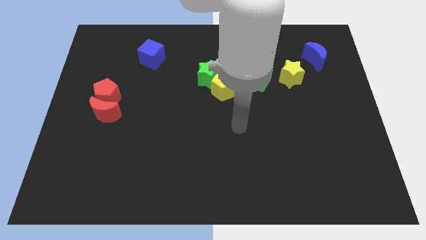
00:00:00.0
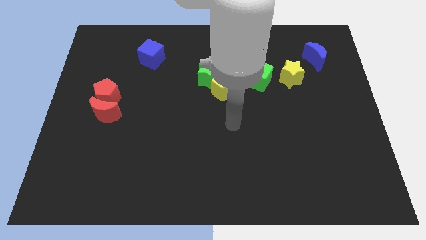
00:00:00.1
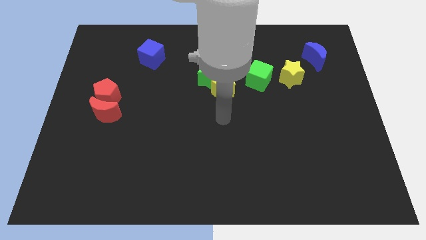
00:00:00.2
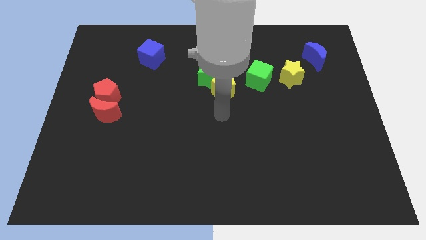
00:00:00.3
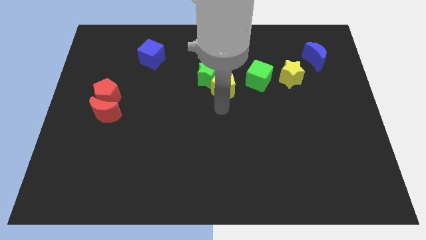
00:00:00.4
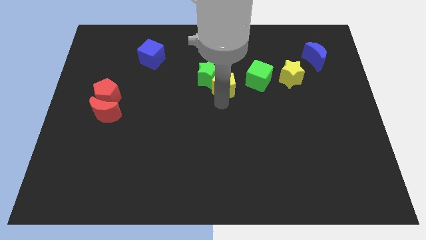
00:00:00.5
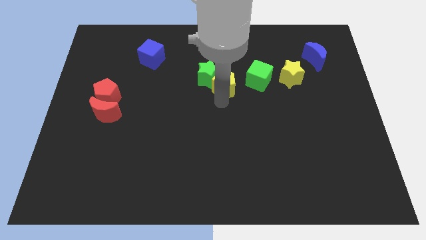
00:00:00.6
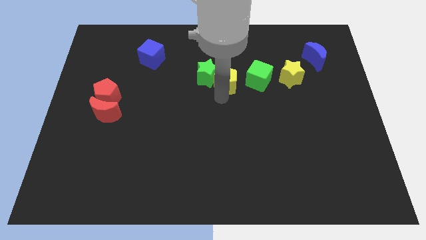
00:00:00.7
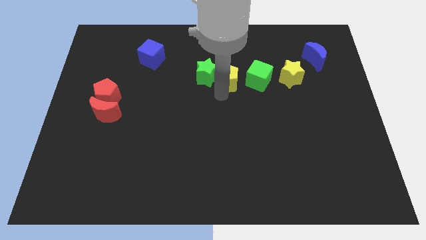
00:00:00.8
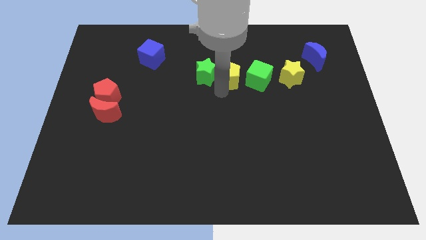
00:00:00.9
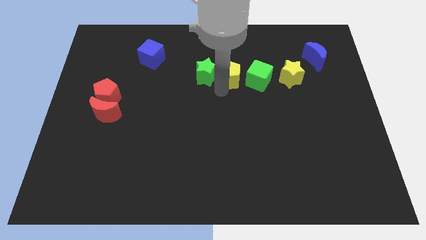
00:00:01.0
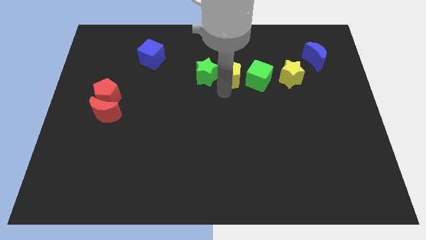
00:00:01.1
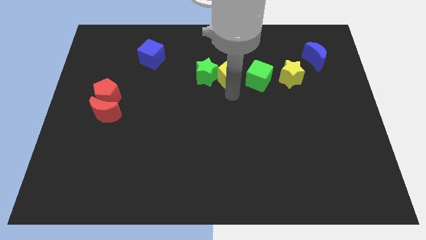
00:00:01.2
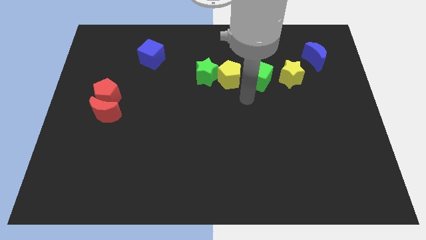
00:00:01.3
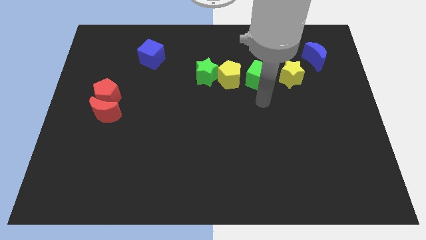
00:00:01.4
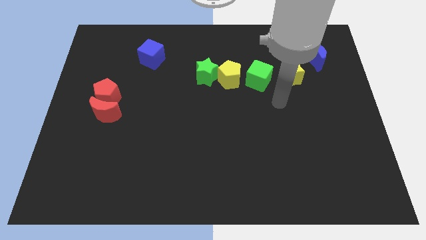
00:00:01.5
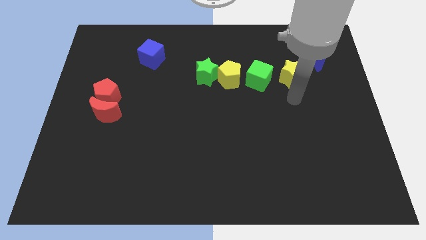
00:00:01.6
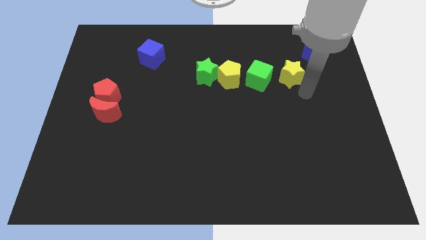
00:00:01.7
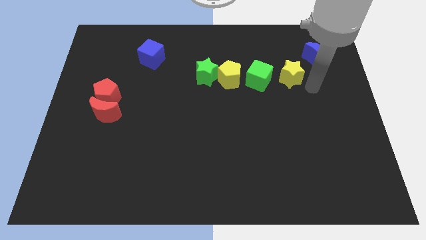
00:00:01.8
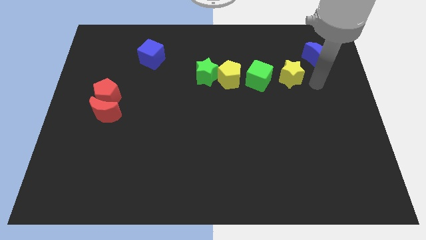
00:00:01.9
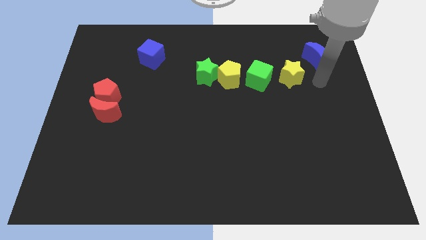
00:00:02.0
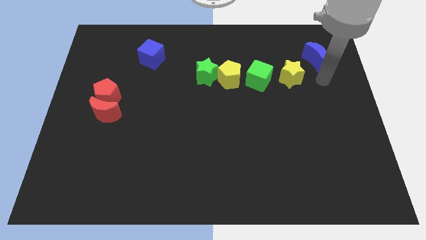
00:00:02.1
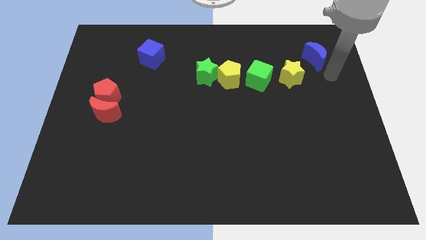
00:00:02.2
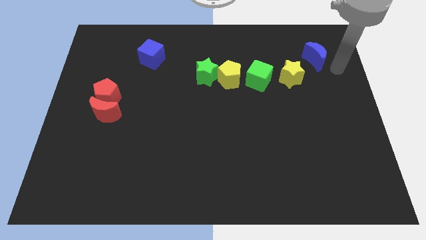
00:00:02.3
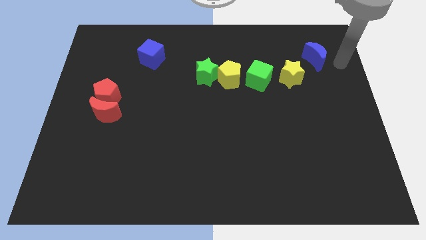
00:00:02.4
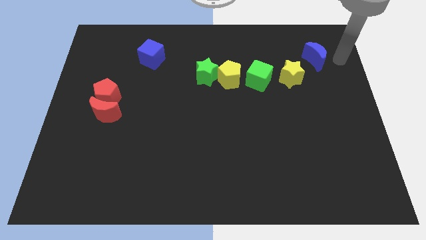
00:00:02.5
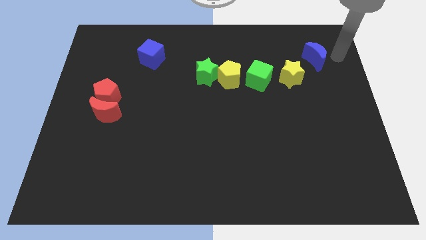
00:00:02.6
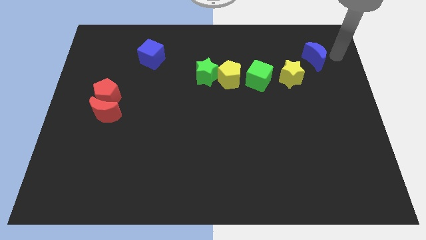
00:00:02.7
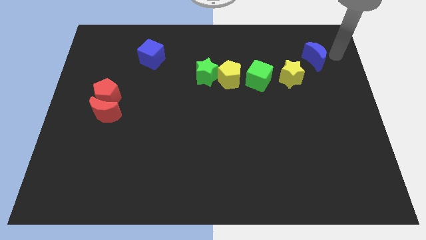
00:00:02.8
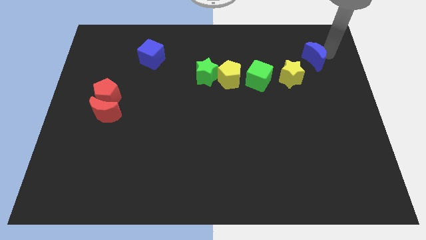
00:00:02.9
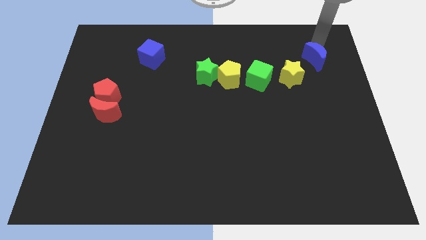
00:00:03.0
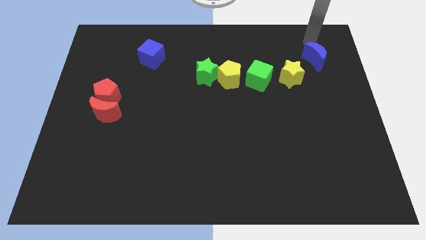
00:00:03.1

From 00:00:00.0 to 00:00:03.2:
slightly push the yellow pentagon and green star towards the top side of the board

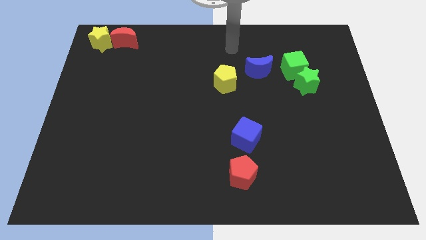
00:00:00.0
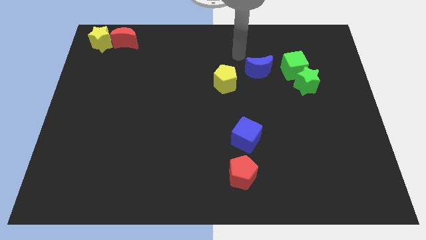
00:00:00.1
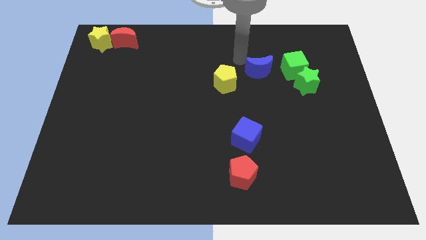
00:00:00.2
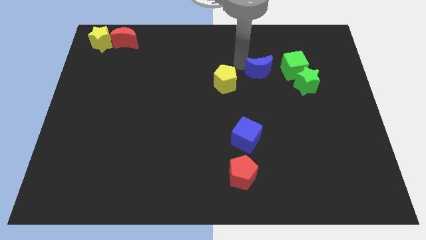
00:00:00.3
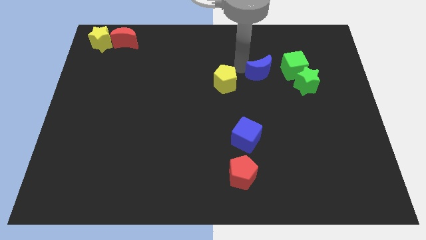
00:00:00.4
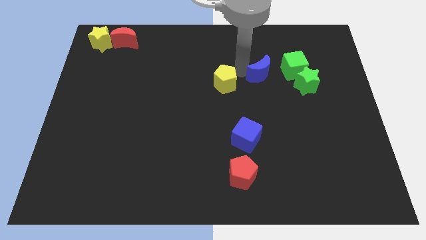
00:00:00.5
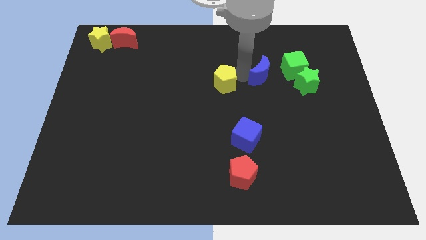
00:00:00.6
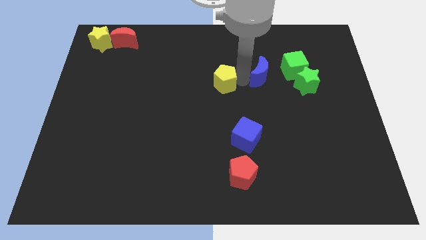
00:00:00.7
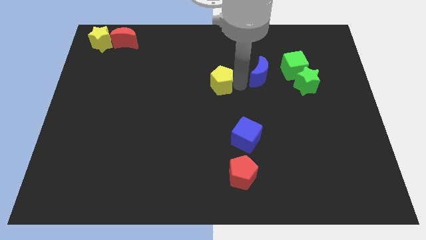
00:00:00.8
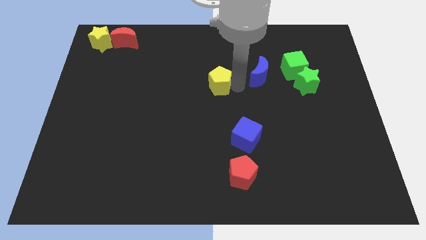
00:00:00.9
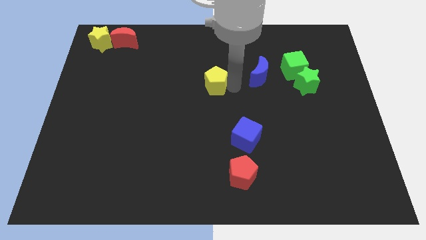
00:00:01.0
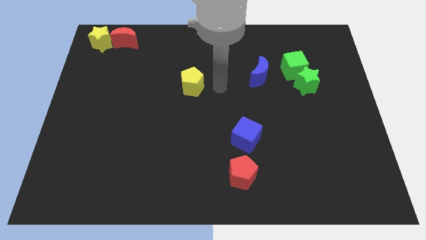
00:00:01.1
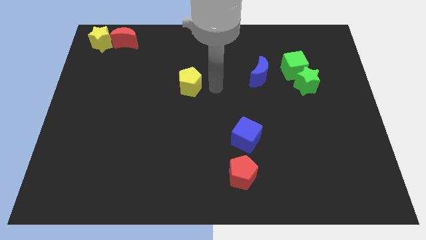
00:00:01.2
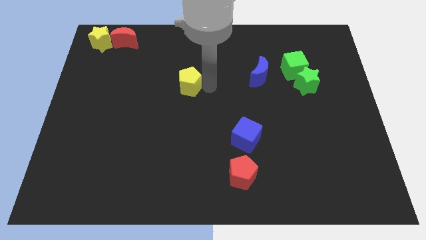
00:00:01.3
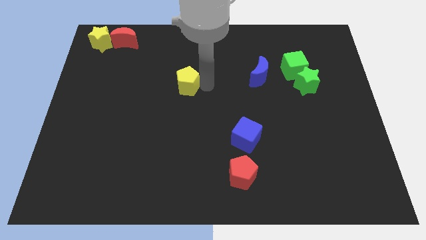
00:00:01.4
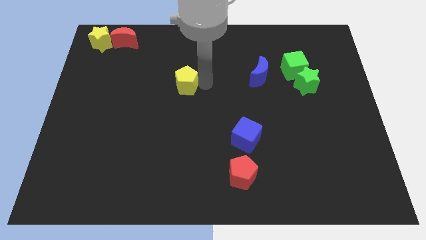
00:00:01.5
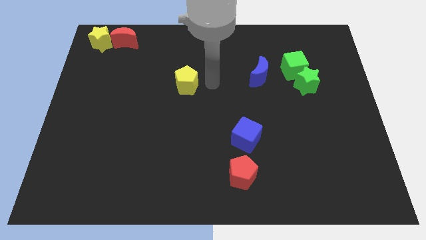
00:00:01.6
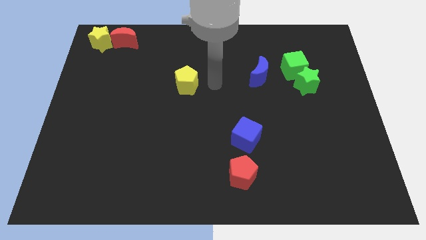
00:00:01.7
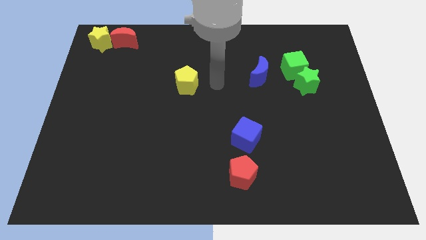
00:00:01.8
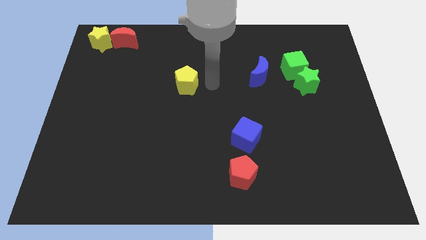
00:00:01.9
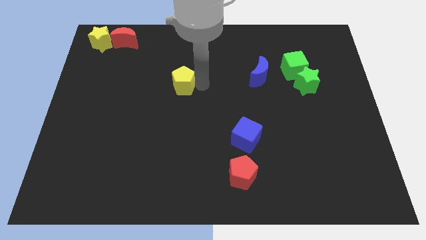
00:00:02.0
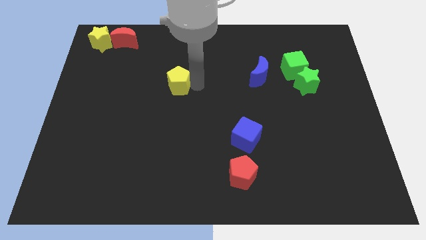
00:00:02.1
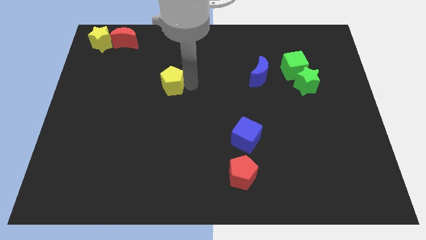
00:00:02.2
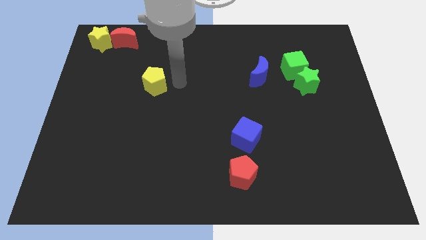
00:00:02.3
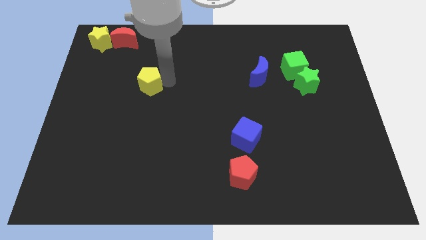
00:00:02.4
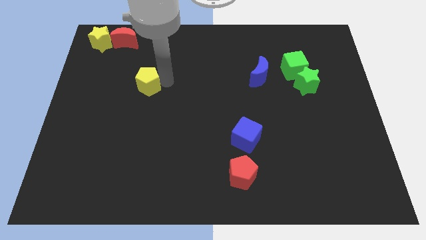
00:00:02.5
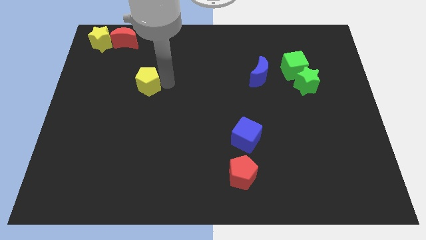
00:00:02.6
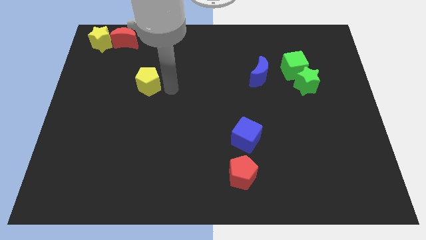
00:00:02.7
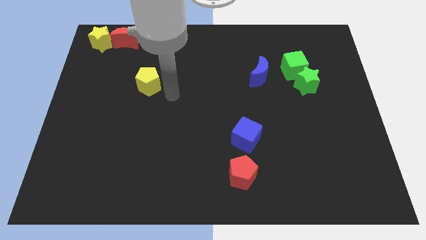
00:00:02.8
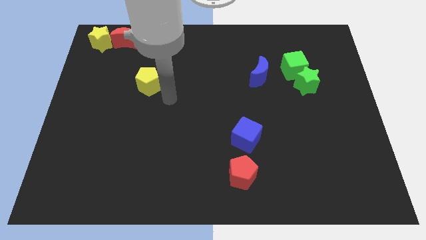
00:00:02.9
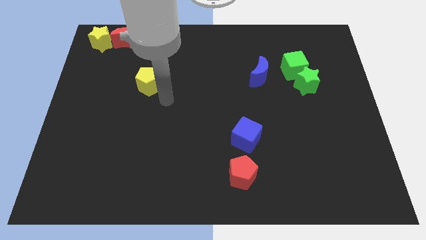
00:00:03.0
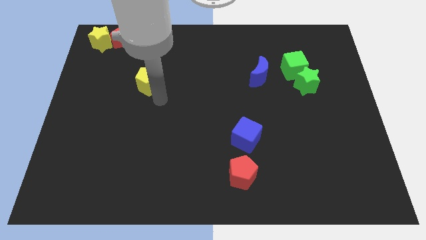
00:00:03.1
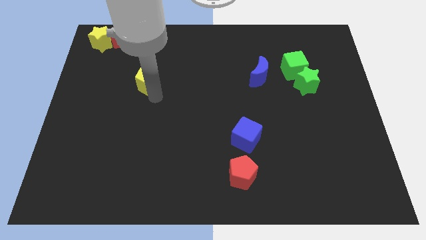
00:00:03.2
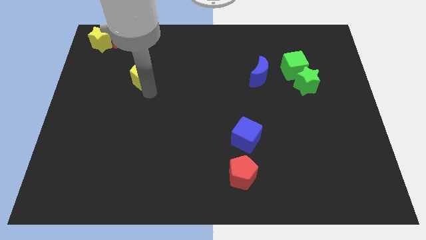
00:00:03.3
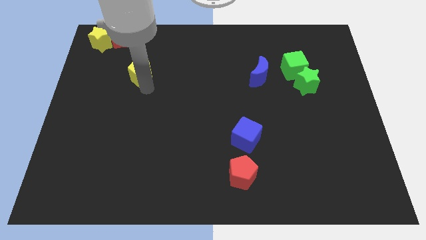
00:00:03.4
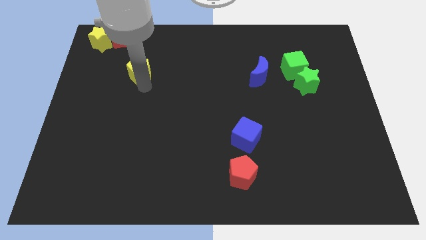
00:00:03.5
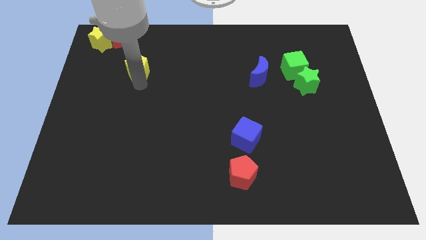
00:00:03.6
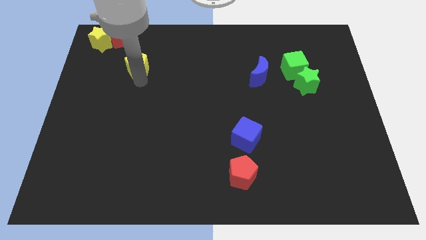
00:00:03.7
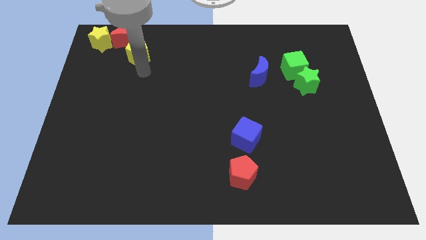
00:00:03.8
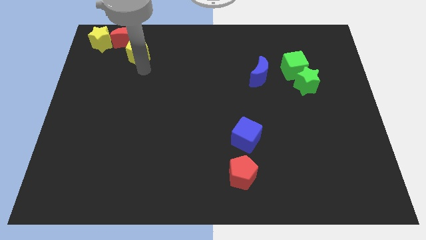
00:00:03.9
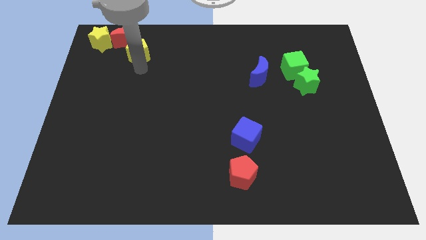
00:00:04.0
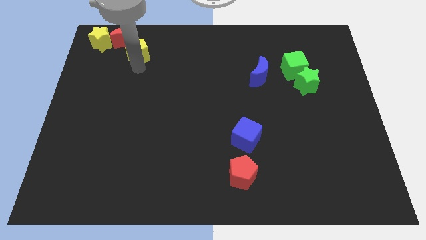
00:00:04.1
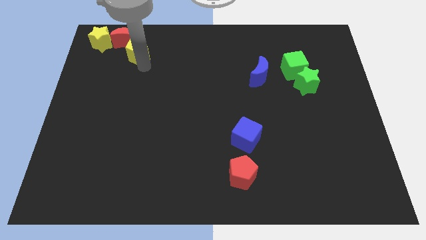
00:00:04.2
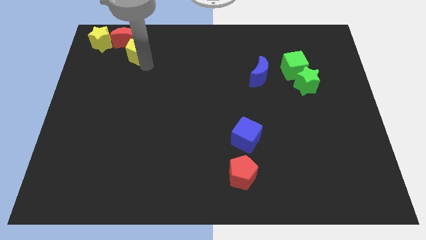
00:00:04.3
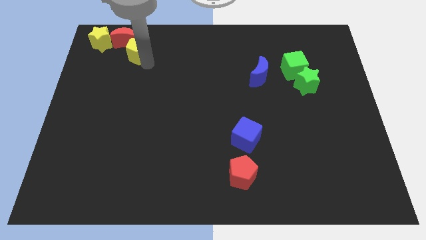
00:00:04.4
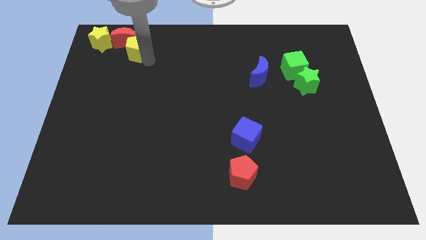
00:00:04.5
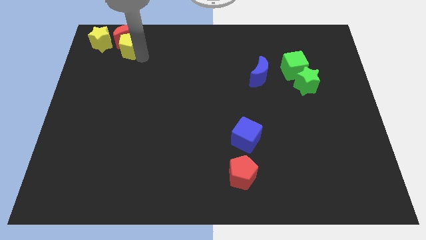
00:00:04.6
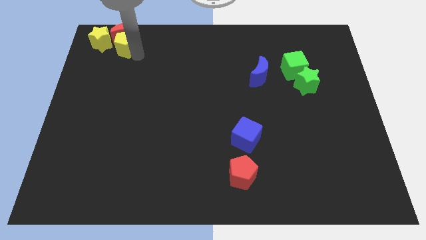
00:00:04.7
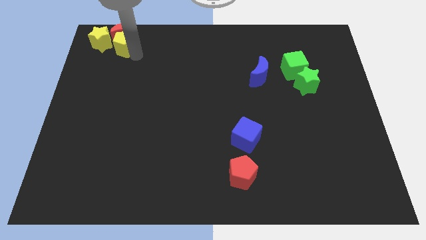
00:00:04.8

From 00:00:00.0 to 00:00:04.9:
push the yellow pentagon into the bottom side of the red crescent

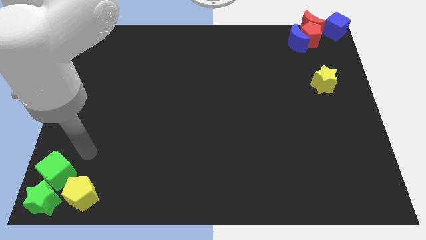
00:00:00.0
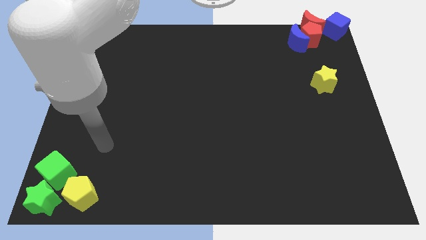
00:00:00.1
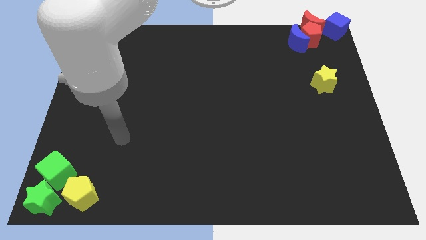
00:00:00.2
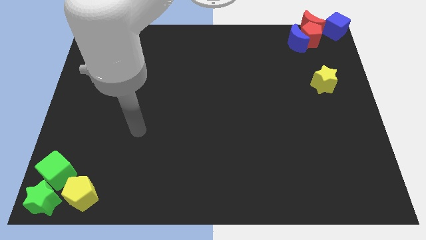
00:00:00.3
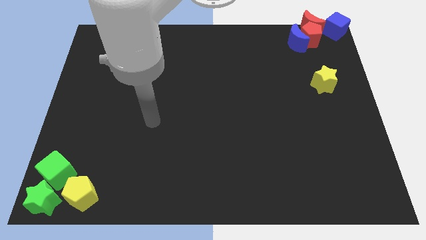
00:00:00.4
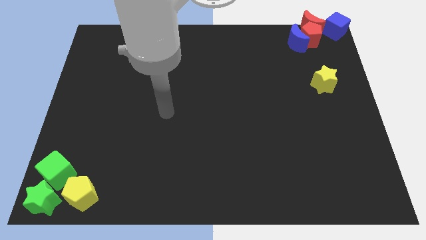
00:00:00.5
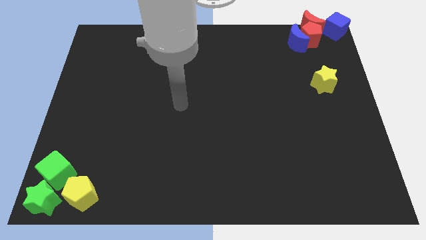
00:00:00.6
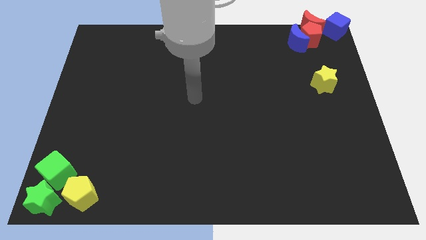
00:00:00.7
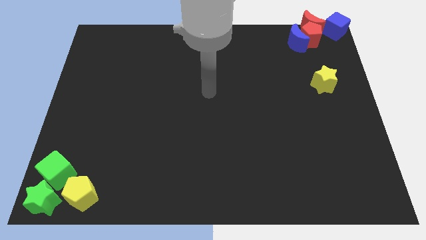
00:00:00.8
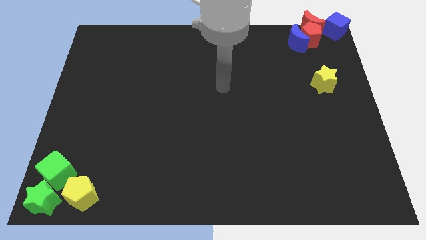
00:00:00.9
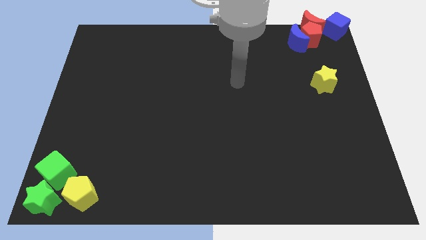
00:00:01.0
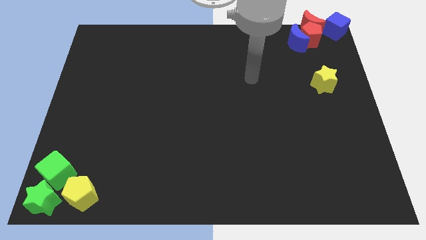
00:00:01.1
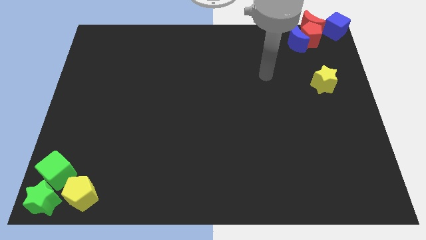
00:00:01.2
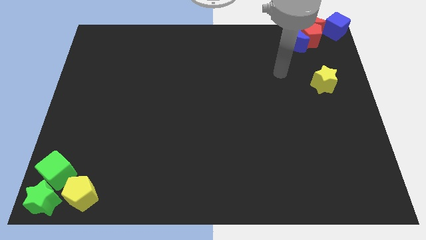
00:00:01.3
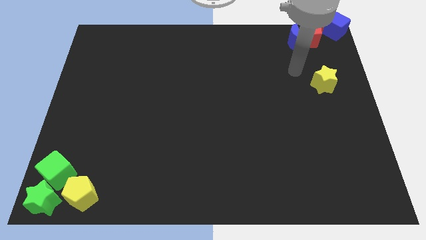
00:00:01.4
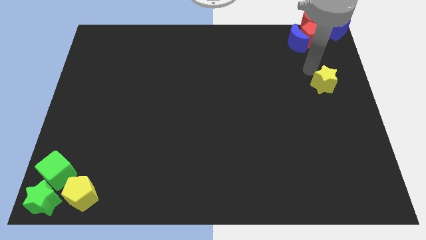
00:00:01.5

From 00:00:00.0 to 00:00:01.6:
move your arm from the top of the green cube to the left of the yellow star
